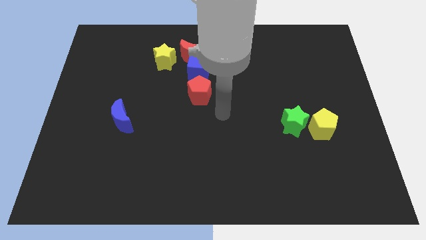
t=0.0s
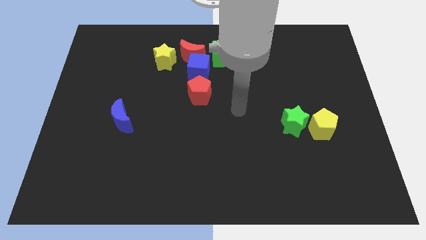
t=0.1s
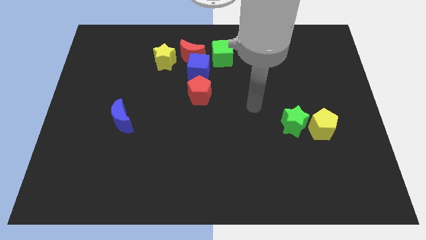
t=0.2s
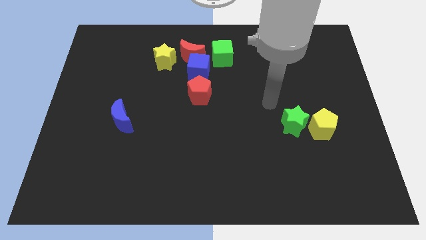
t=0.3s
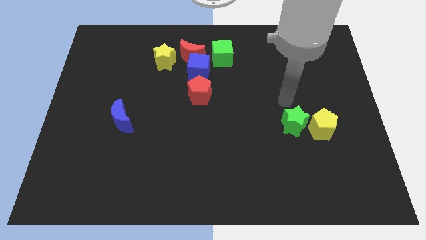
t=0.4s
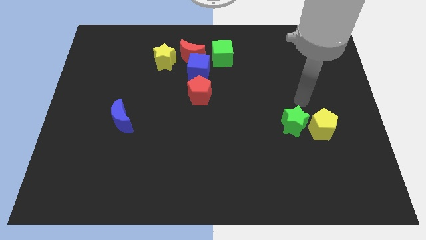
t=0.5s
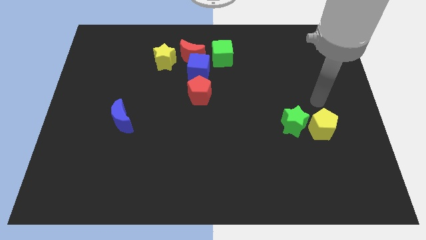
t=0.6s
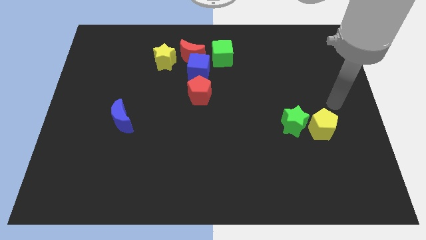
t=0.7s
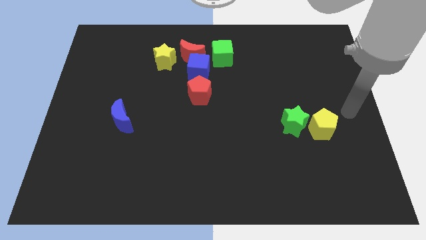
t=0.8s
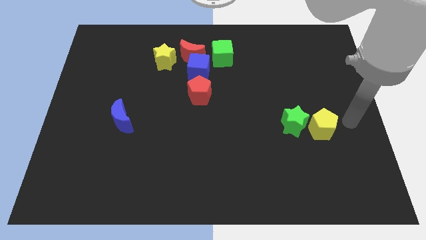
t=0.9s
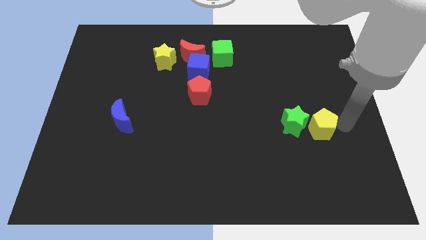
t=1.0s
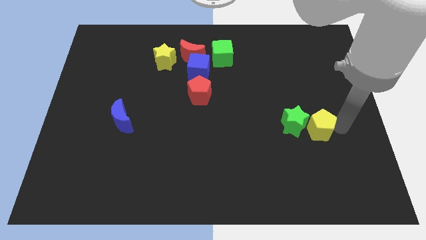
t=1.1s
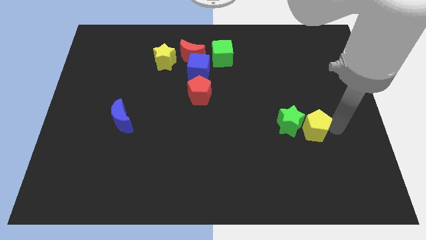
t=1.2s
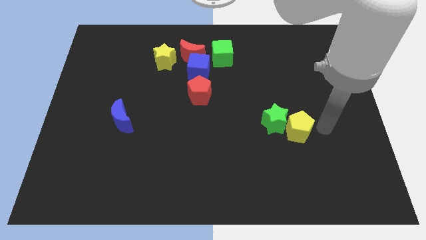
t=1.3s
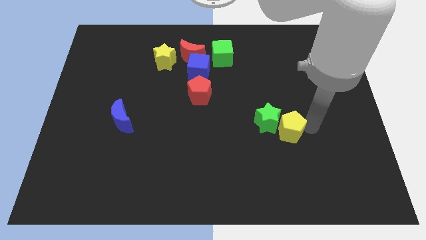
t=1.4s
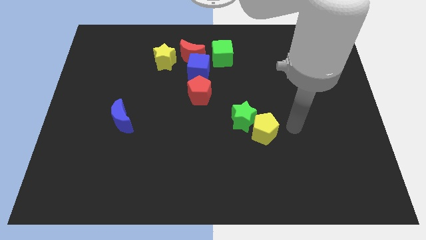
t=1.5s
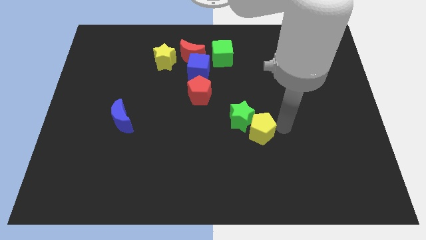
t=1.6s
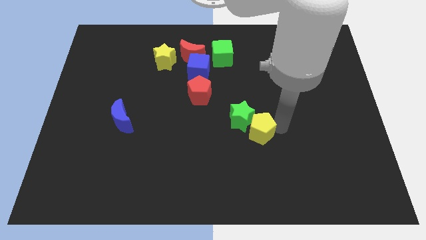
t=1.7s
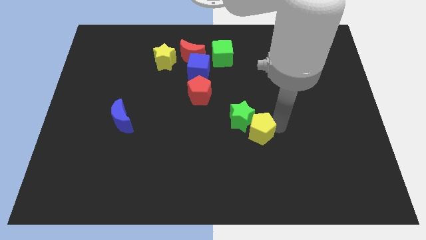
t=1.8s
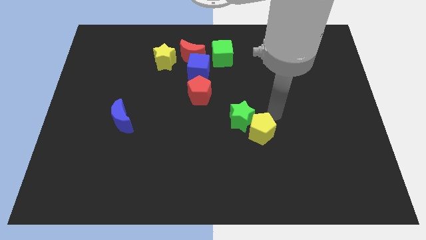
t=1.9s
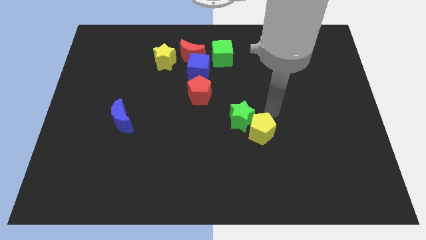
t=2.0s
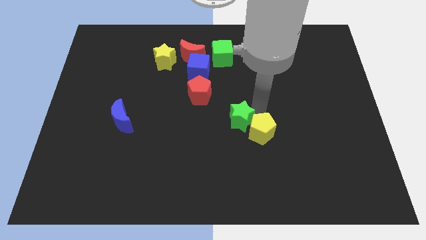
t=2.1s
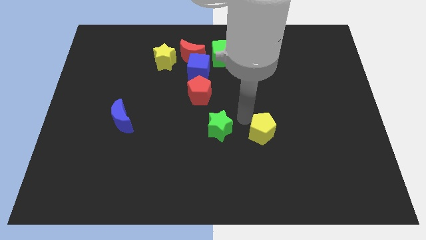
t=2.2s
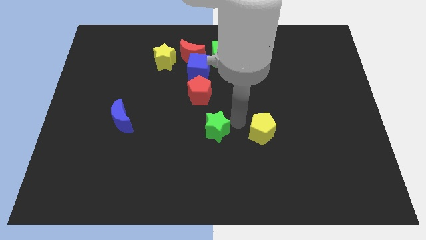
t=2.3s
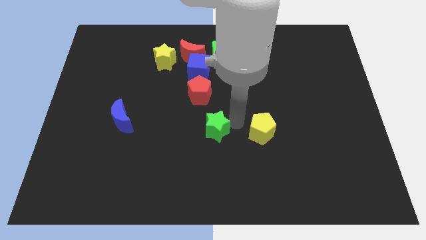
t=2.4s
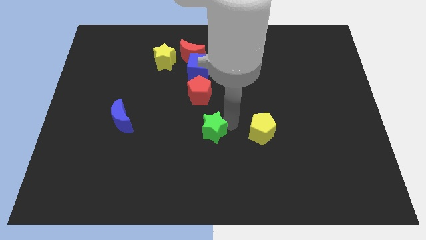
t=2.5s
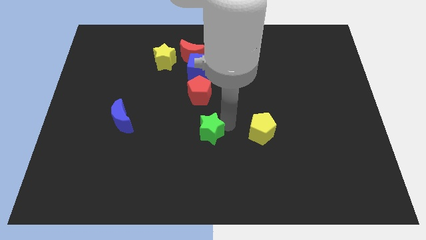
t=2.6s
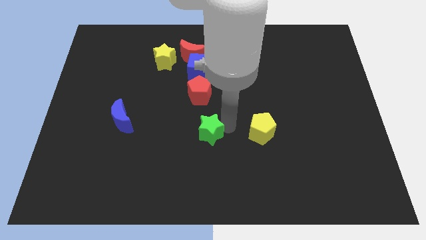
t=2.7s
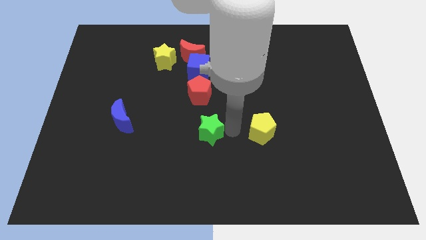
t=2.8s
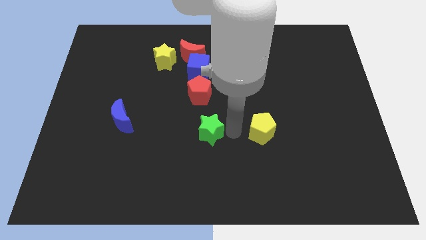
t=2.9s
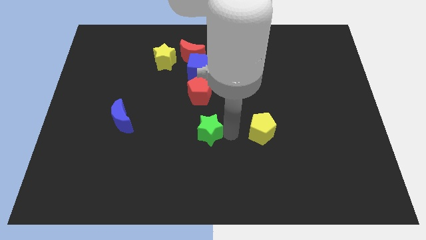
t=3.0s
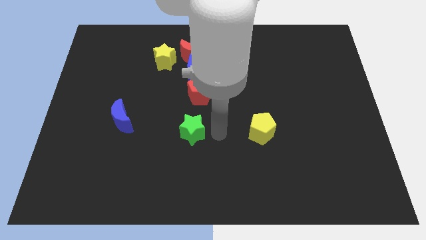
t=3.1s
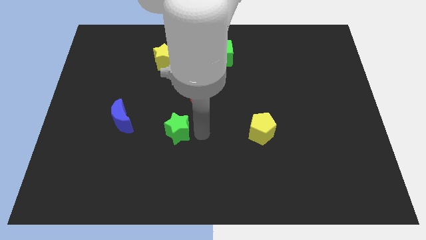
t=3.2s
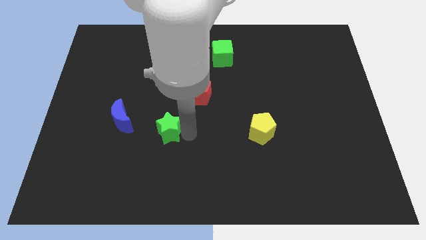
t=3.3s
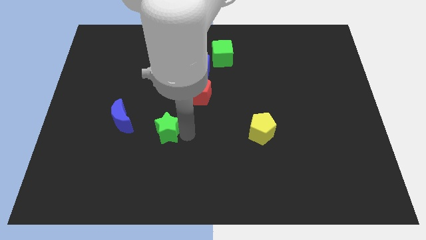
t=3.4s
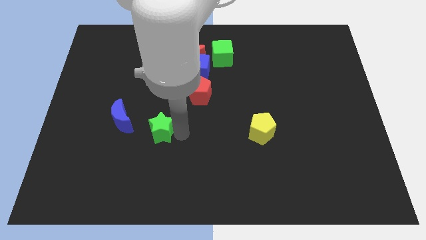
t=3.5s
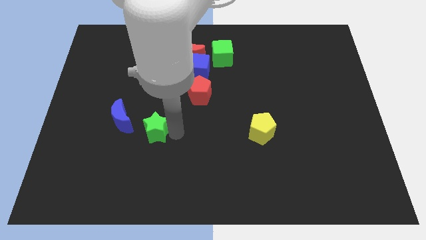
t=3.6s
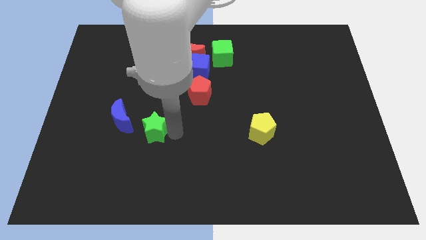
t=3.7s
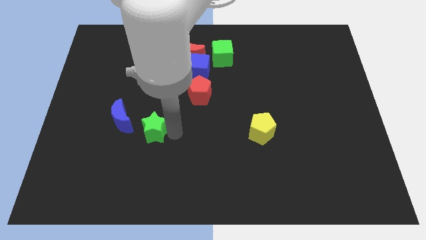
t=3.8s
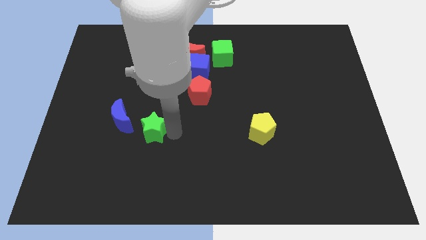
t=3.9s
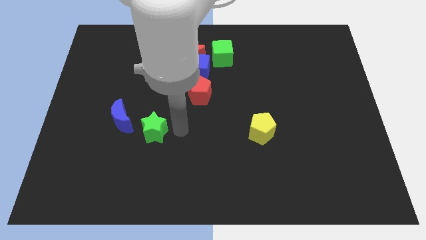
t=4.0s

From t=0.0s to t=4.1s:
separate the green star from the yellow pentagon

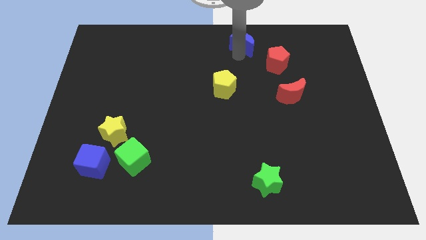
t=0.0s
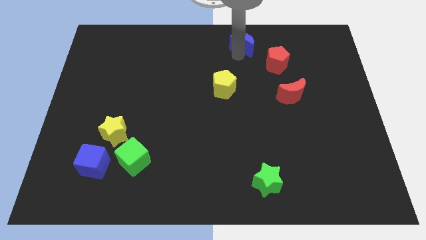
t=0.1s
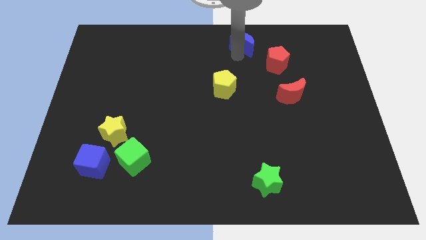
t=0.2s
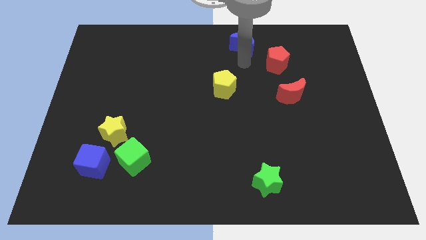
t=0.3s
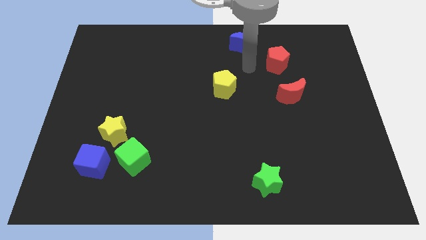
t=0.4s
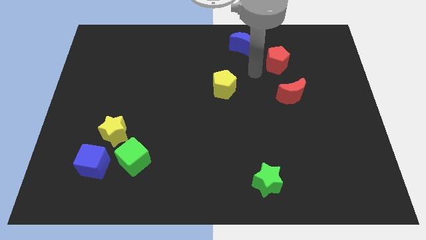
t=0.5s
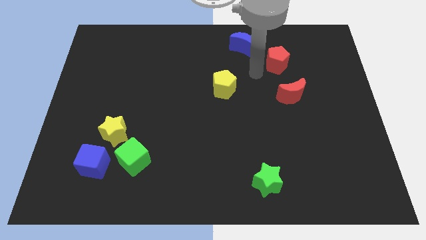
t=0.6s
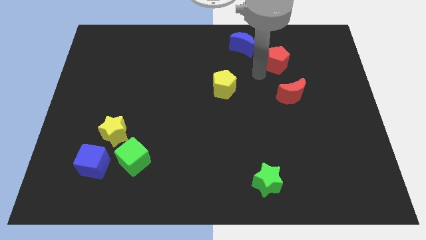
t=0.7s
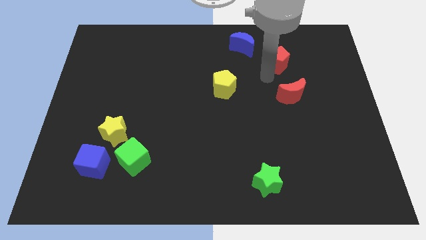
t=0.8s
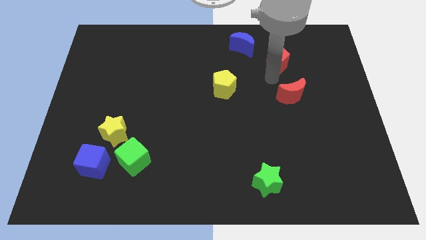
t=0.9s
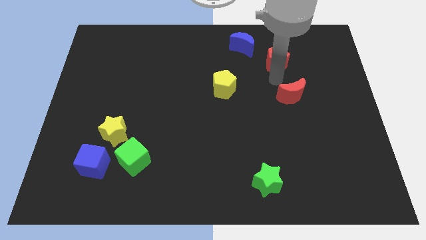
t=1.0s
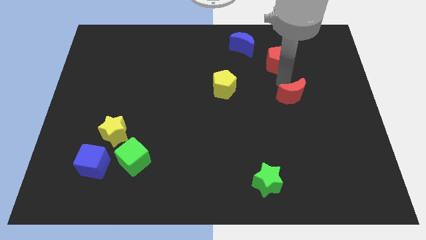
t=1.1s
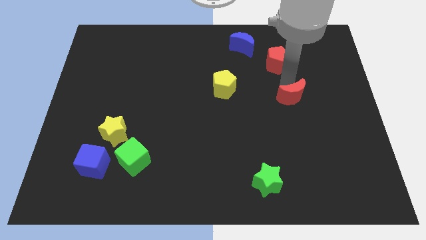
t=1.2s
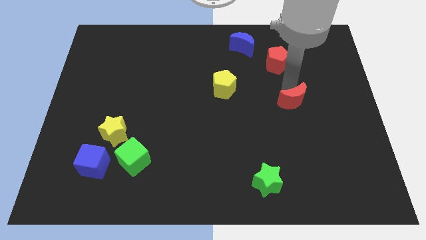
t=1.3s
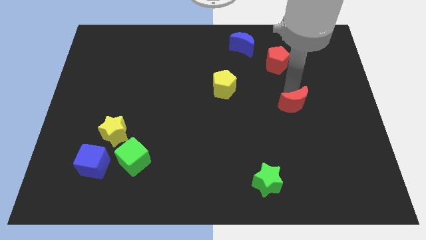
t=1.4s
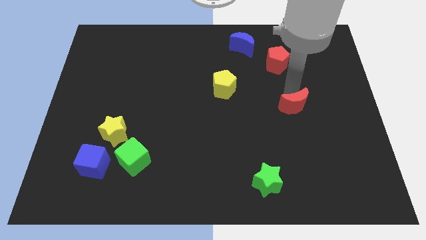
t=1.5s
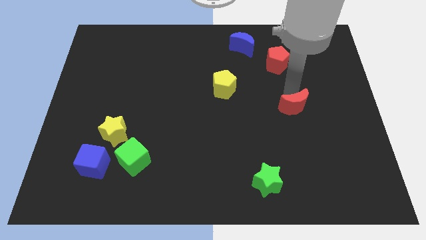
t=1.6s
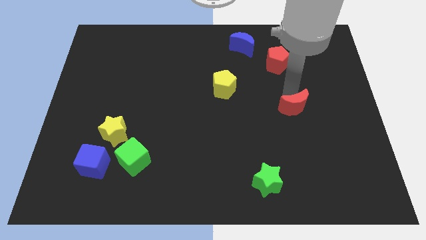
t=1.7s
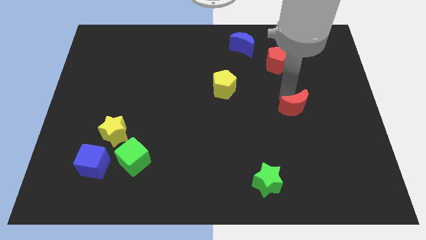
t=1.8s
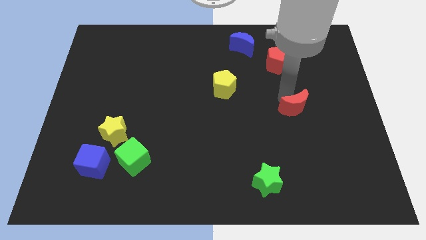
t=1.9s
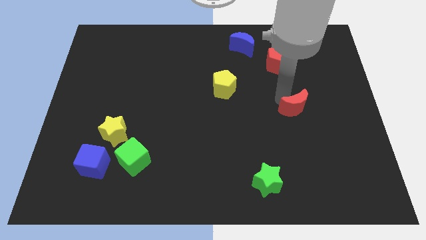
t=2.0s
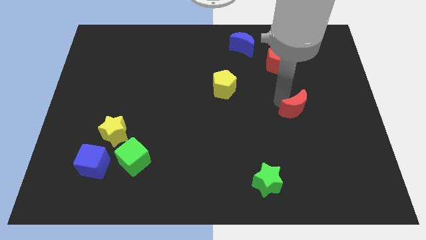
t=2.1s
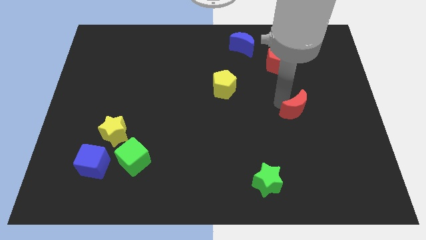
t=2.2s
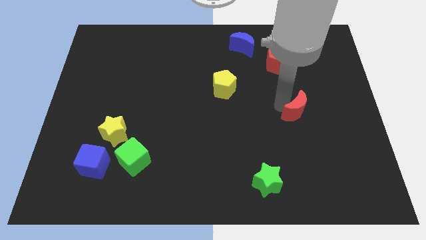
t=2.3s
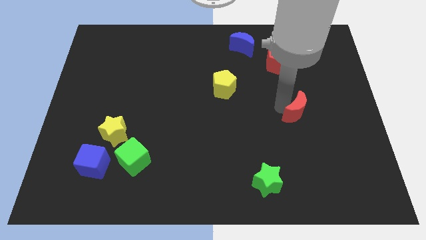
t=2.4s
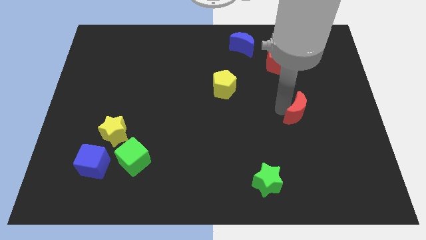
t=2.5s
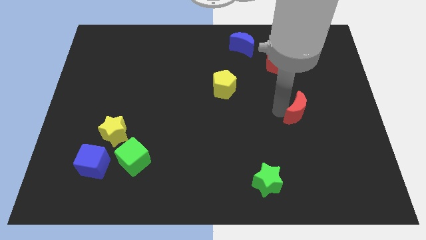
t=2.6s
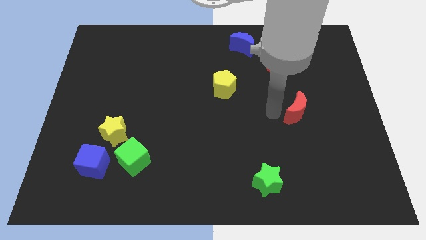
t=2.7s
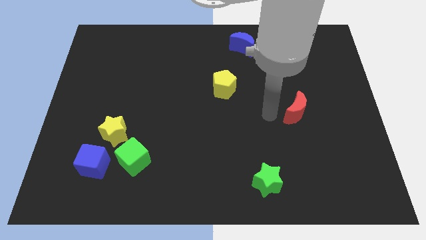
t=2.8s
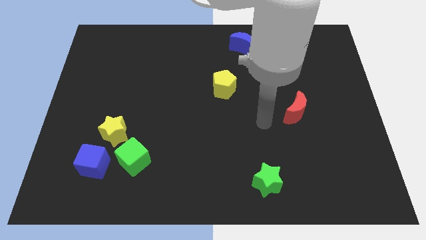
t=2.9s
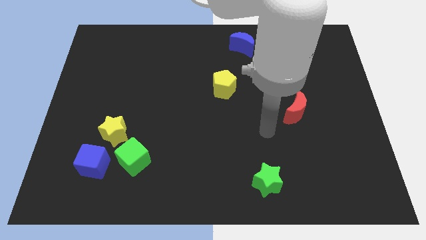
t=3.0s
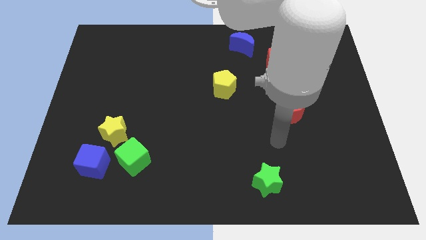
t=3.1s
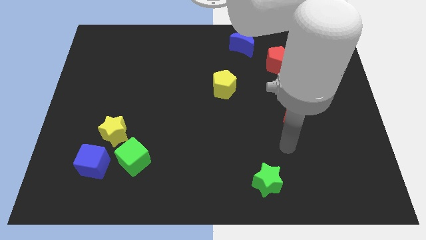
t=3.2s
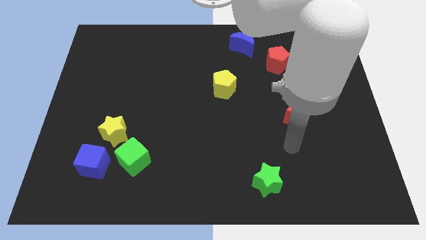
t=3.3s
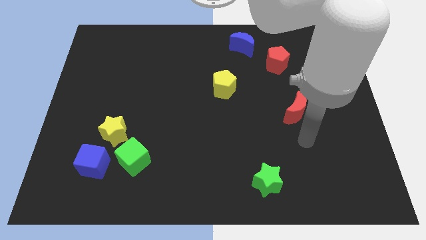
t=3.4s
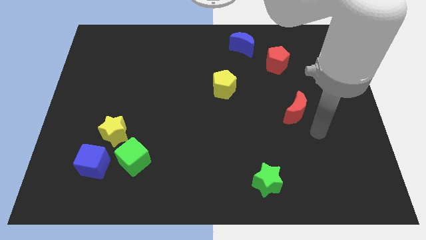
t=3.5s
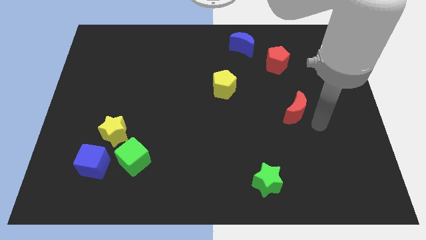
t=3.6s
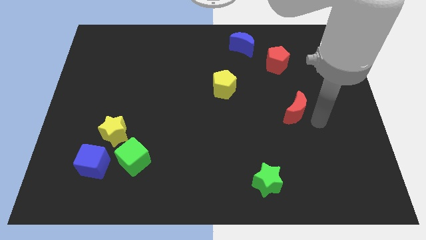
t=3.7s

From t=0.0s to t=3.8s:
push the red cresecnt to the center of the board

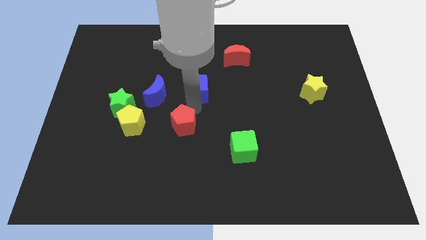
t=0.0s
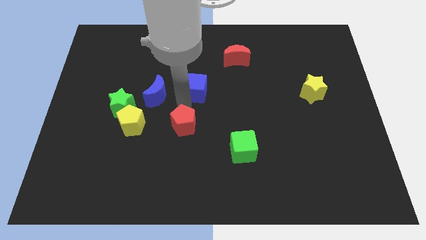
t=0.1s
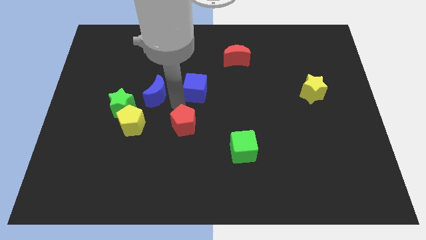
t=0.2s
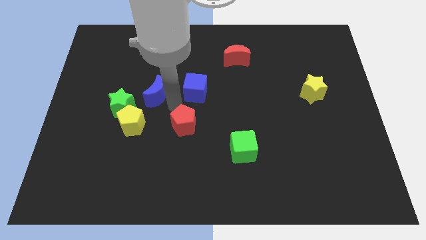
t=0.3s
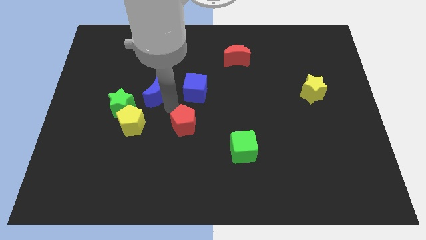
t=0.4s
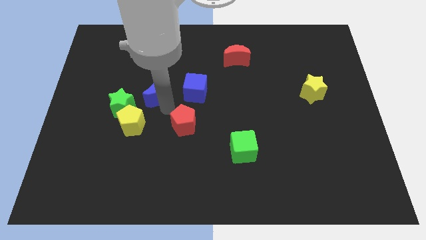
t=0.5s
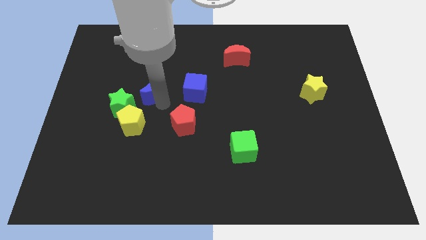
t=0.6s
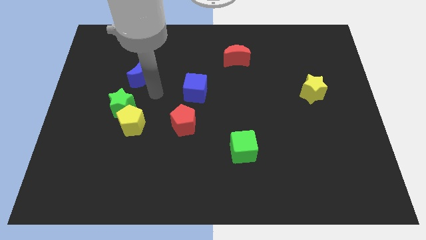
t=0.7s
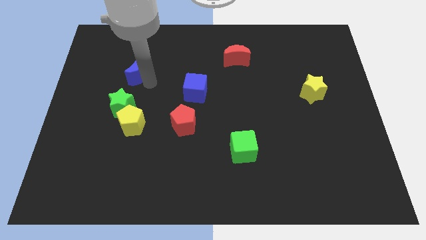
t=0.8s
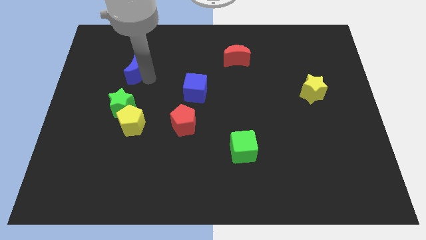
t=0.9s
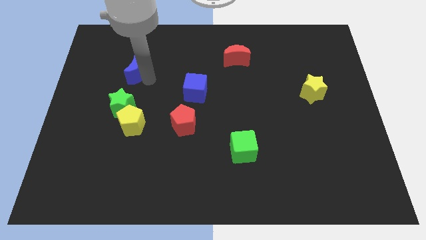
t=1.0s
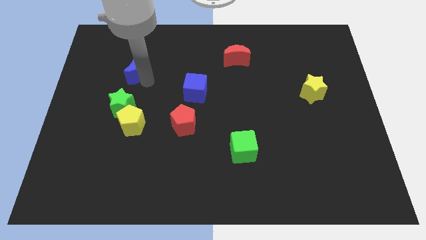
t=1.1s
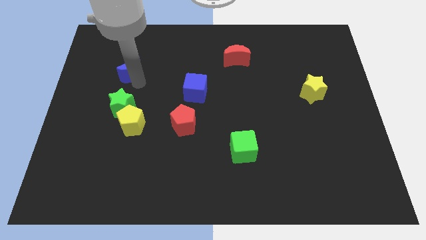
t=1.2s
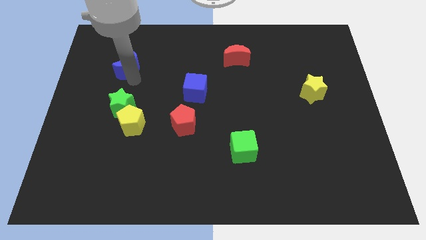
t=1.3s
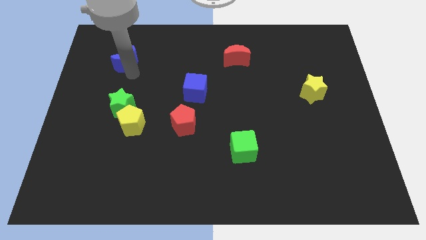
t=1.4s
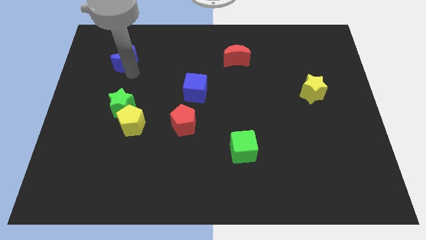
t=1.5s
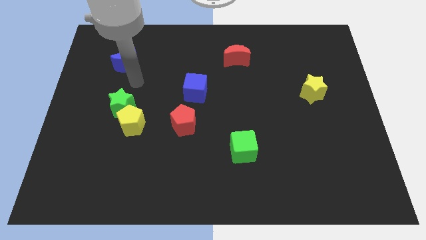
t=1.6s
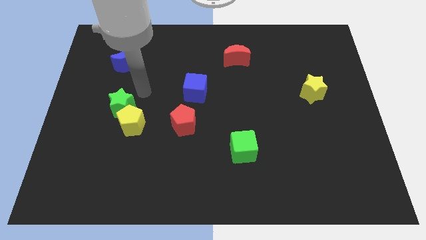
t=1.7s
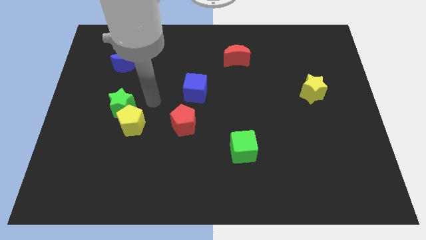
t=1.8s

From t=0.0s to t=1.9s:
drag the blue moon slightly upwards
